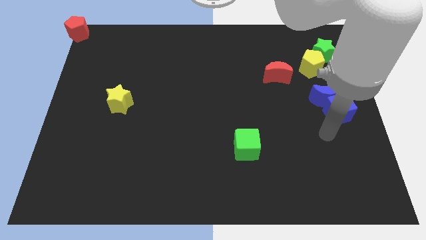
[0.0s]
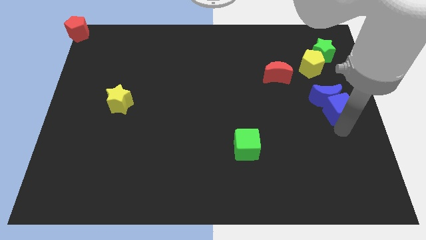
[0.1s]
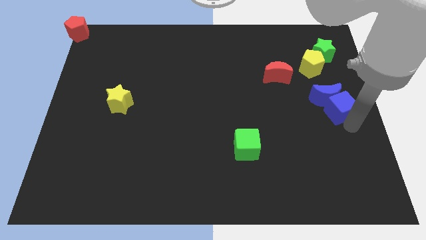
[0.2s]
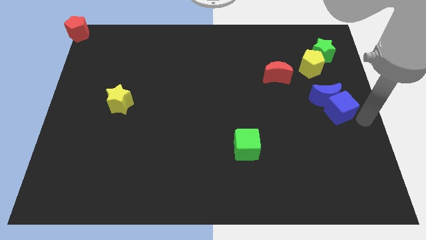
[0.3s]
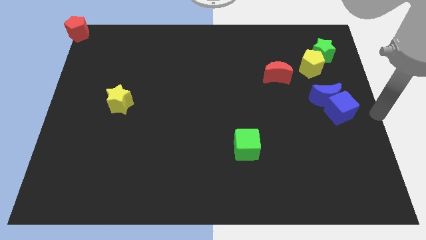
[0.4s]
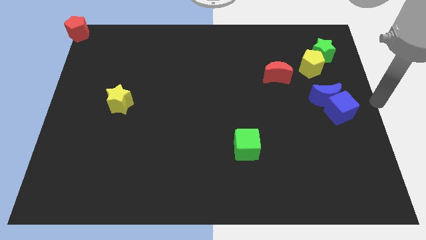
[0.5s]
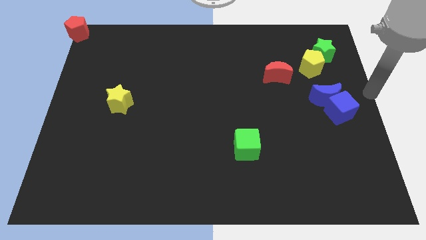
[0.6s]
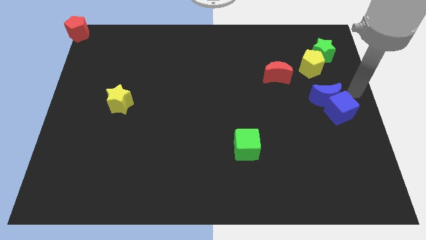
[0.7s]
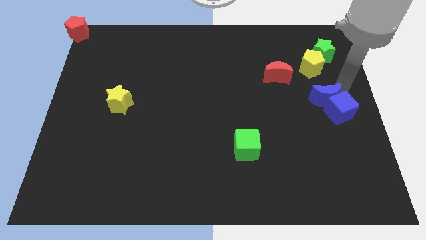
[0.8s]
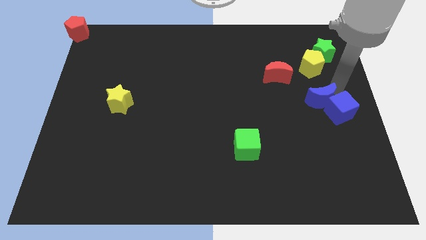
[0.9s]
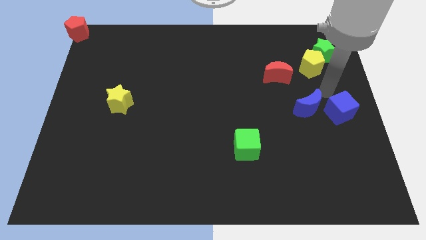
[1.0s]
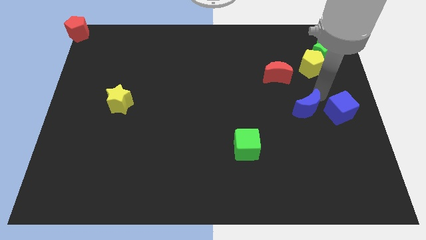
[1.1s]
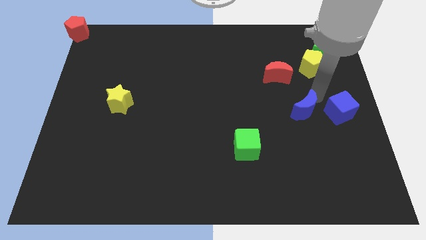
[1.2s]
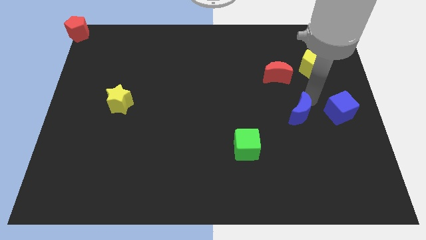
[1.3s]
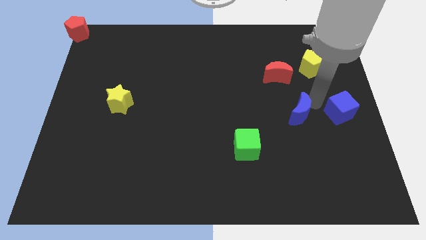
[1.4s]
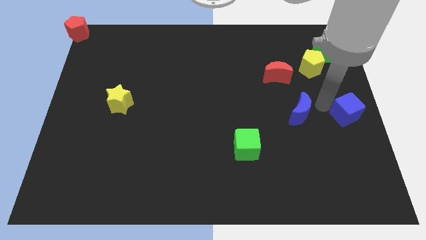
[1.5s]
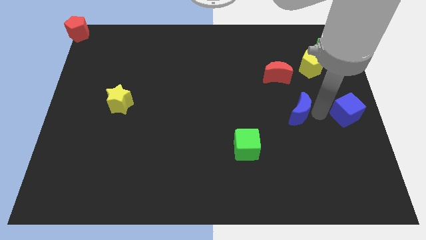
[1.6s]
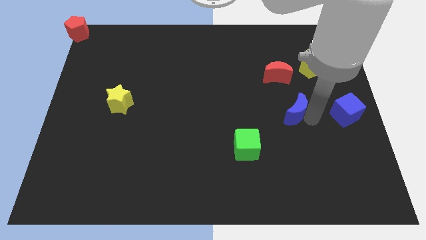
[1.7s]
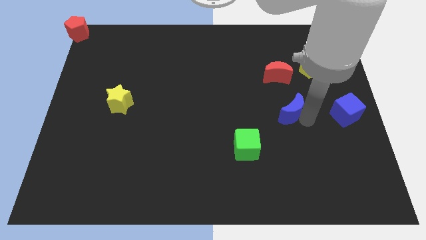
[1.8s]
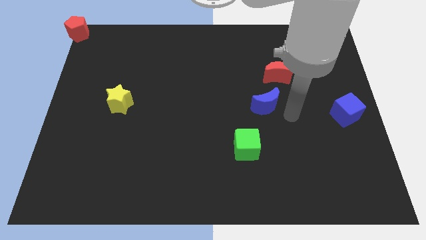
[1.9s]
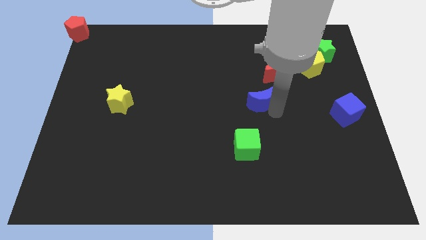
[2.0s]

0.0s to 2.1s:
separate blue crescent from cube

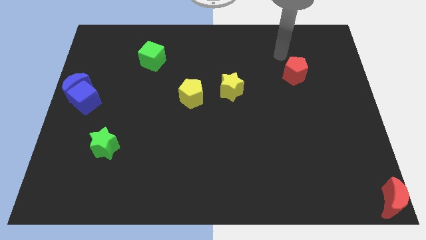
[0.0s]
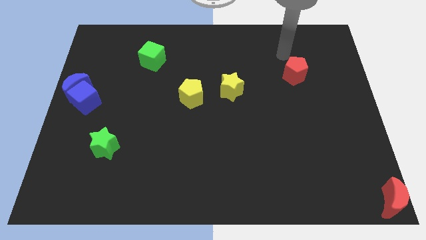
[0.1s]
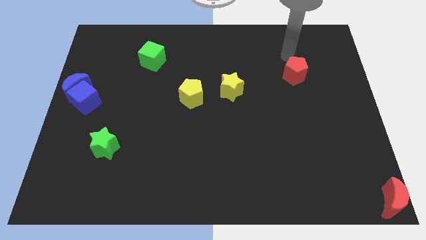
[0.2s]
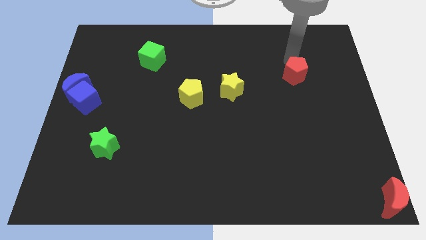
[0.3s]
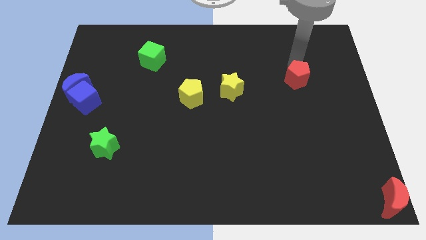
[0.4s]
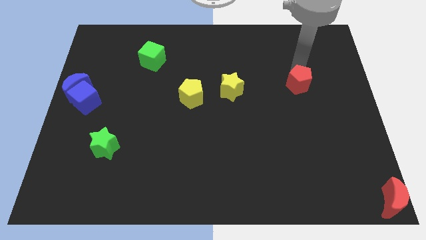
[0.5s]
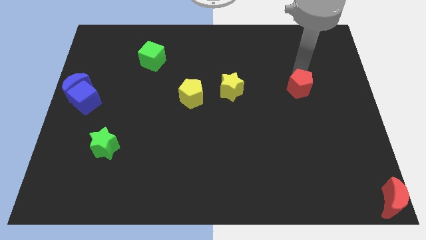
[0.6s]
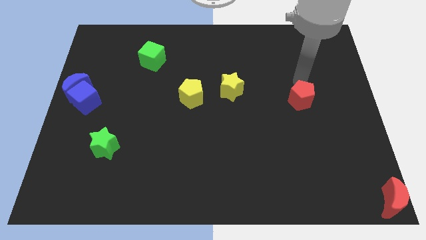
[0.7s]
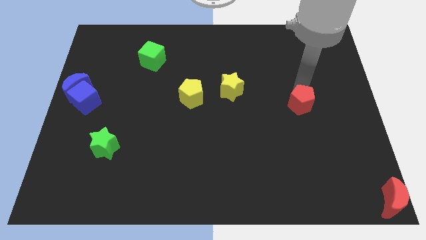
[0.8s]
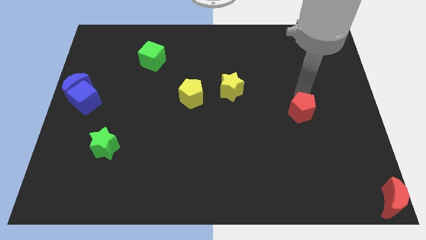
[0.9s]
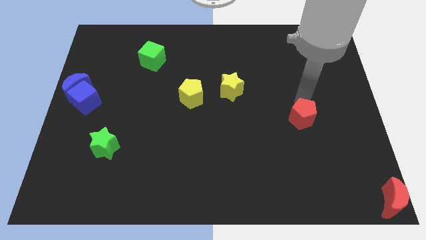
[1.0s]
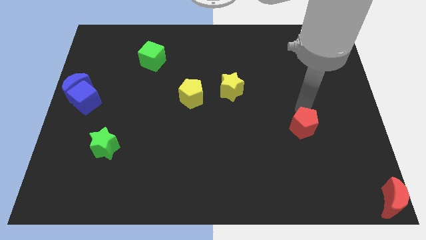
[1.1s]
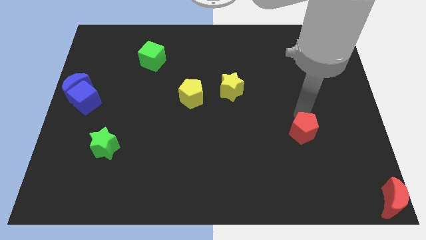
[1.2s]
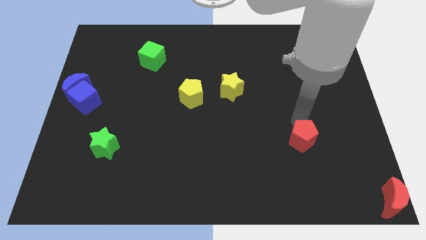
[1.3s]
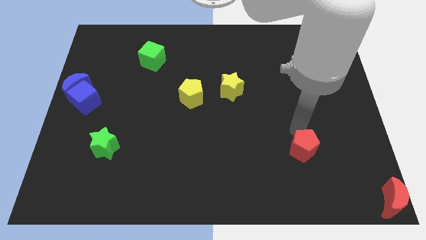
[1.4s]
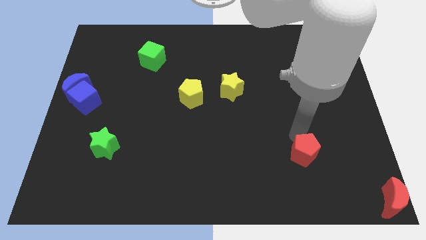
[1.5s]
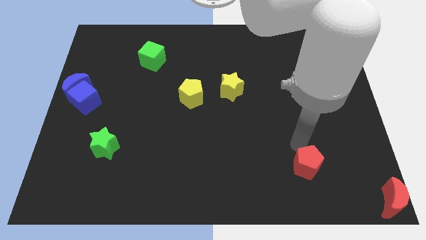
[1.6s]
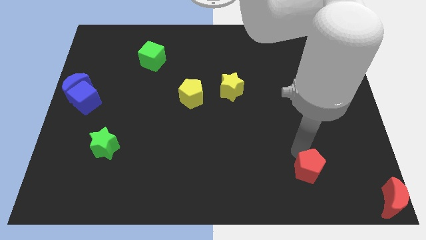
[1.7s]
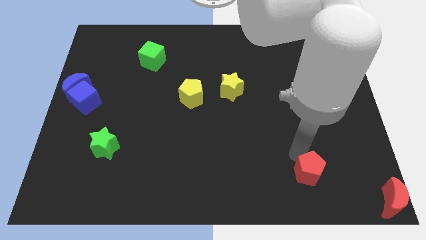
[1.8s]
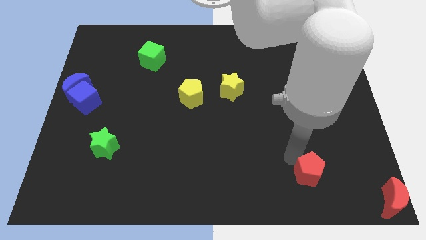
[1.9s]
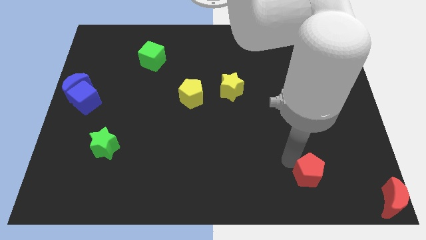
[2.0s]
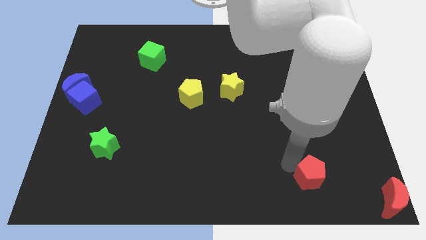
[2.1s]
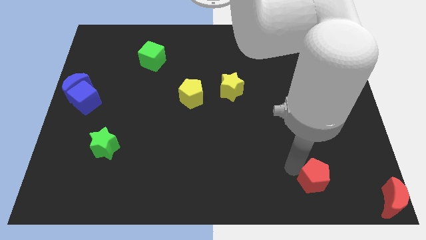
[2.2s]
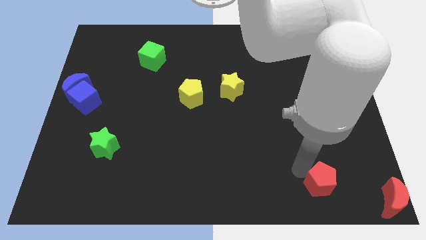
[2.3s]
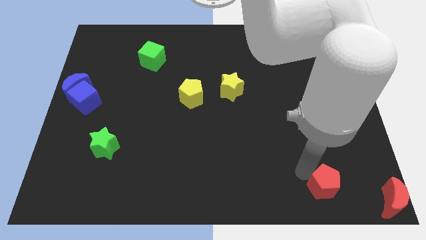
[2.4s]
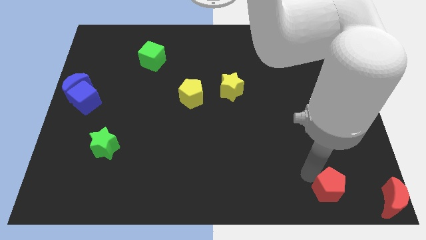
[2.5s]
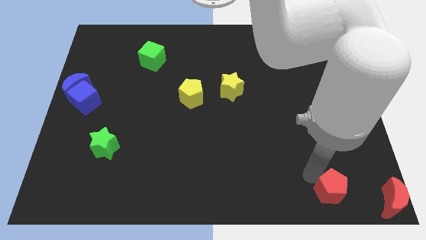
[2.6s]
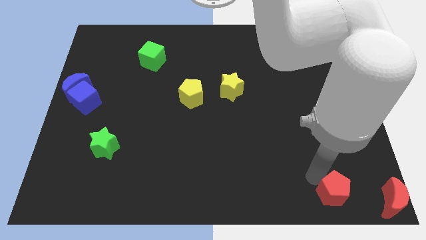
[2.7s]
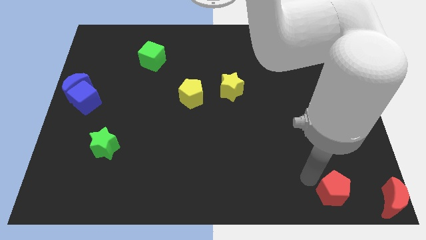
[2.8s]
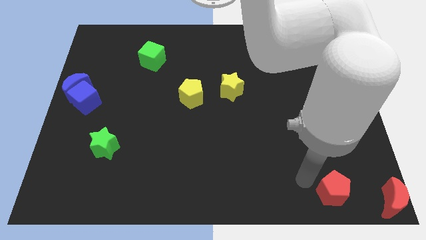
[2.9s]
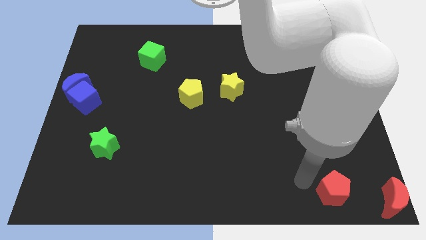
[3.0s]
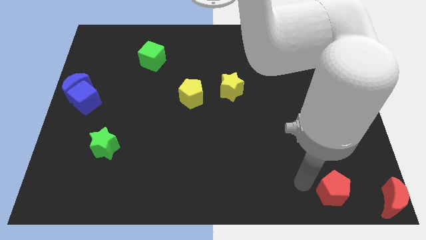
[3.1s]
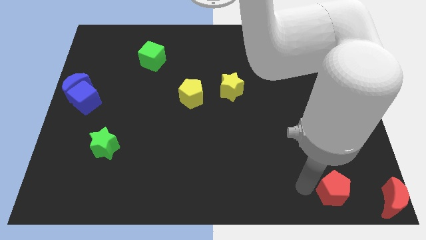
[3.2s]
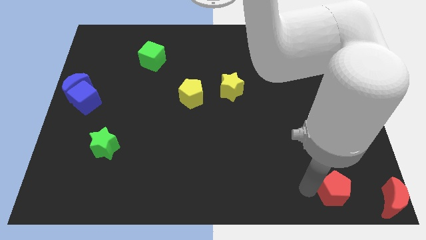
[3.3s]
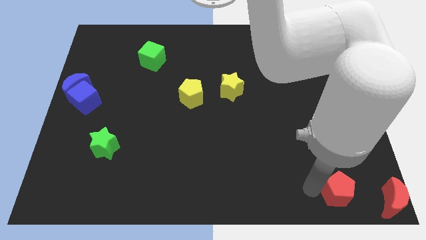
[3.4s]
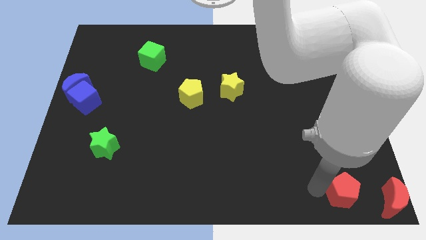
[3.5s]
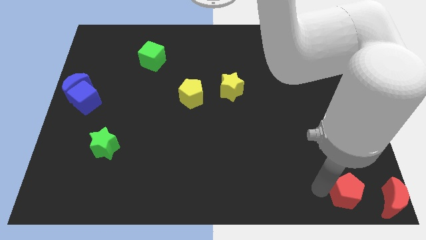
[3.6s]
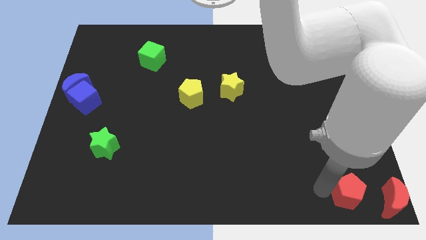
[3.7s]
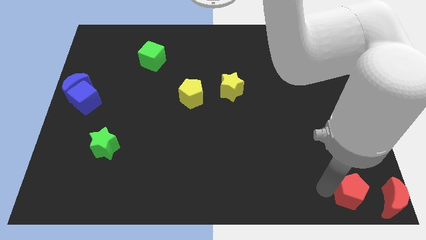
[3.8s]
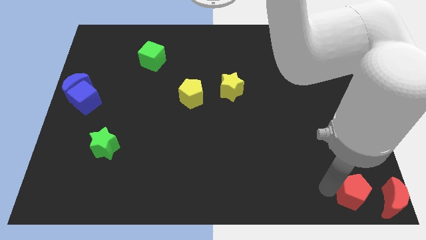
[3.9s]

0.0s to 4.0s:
push the red pentagon towards the bottom right corner

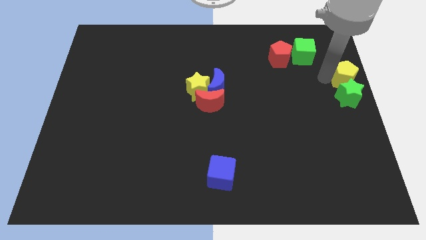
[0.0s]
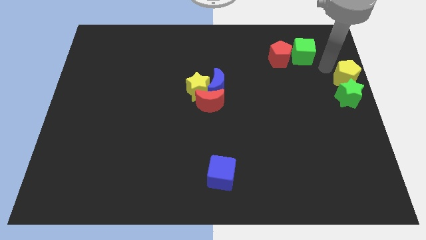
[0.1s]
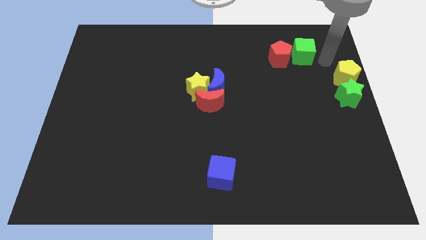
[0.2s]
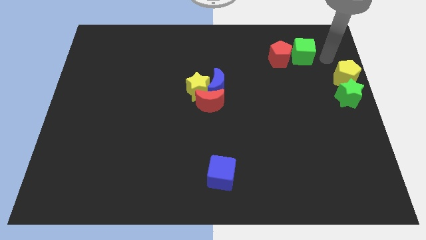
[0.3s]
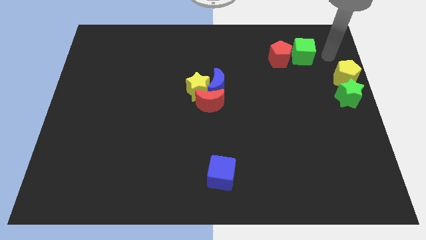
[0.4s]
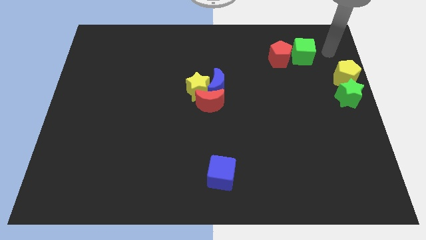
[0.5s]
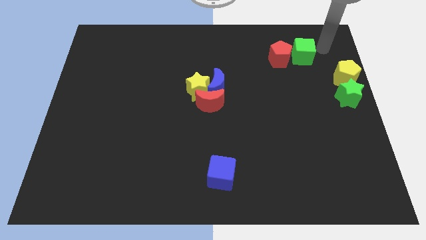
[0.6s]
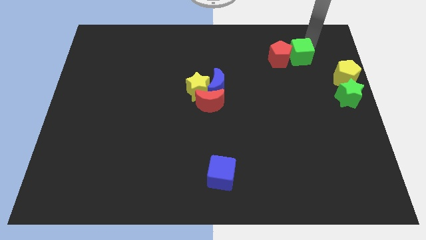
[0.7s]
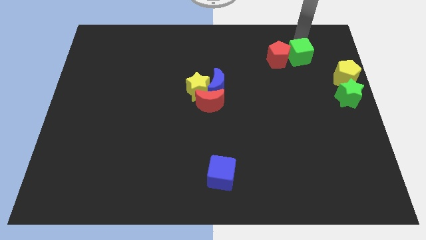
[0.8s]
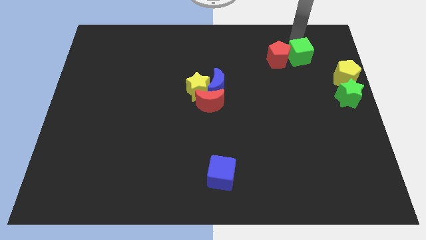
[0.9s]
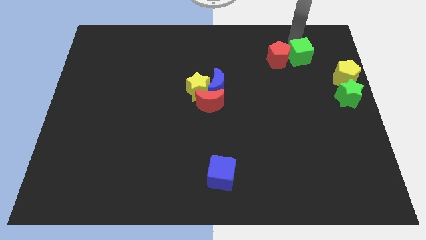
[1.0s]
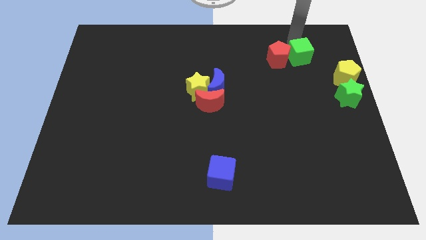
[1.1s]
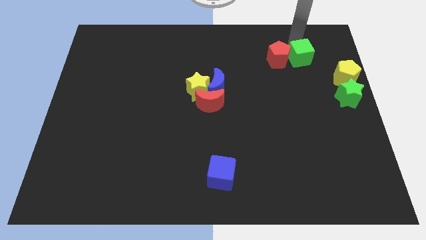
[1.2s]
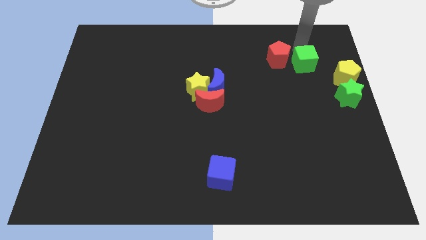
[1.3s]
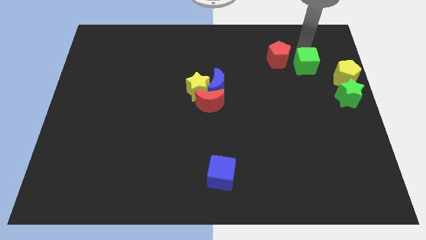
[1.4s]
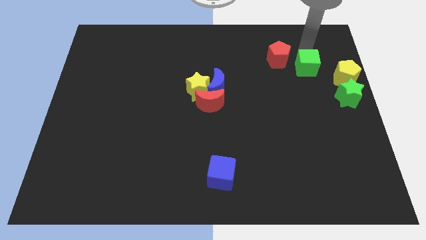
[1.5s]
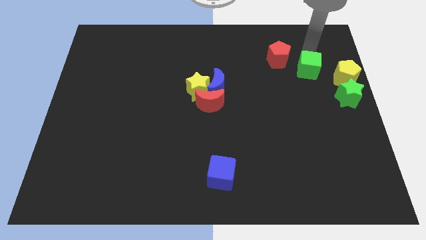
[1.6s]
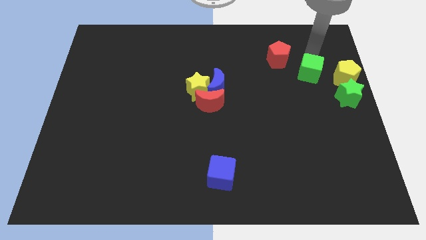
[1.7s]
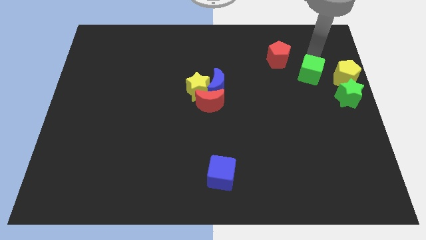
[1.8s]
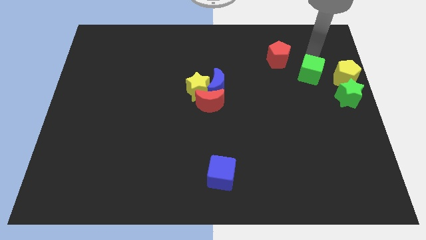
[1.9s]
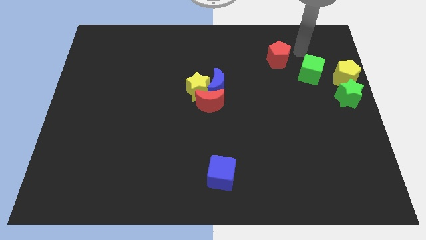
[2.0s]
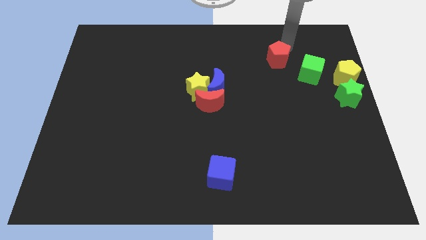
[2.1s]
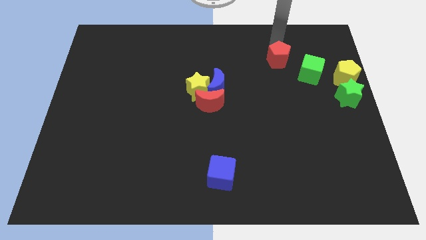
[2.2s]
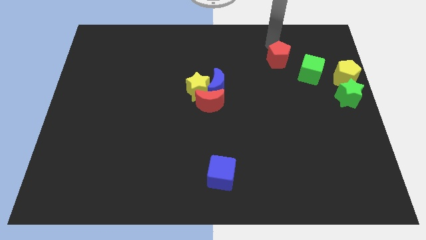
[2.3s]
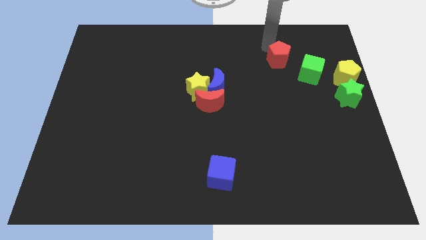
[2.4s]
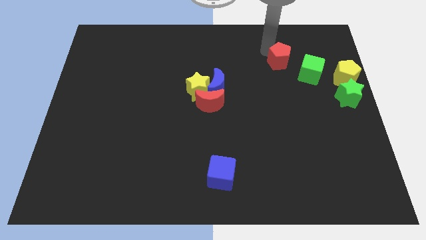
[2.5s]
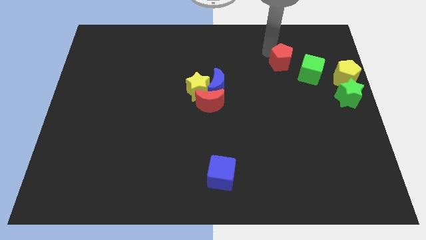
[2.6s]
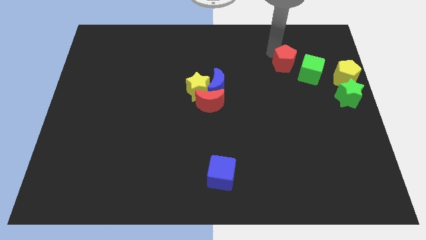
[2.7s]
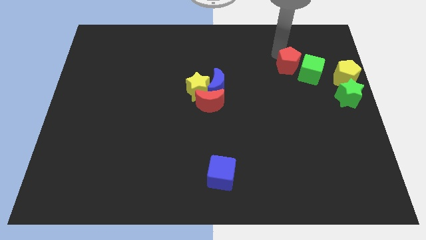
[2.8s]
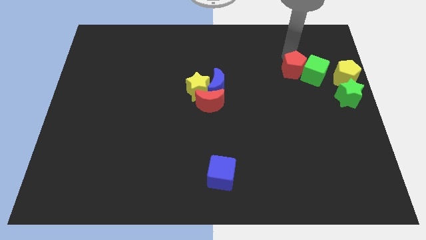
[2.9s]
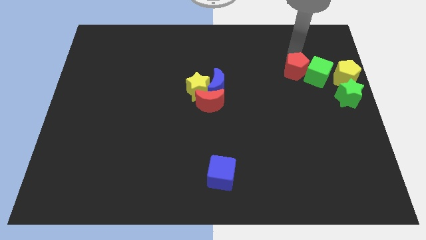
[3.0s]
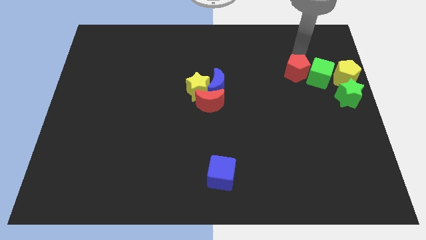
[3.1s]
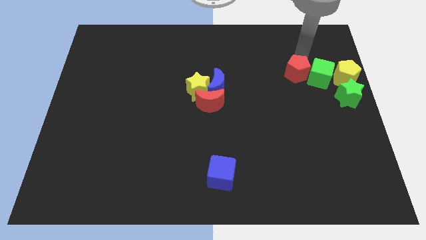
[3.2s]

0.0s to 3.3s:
move the green cube and red pentagon to the left side of the yellow pentagon
